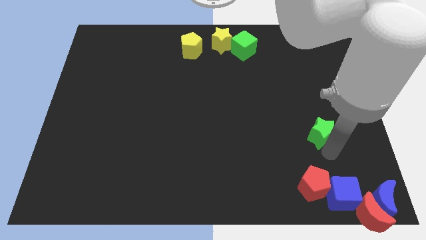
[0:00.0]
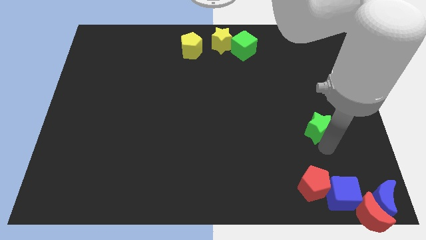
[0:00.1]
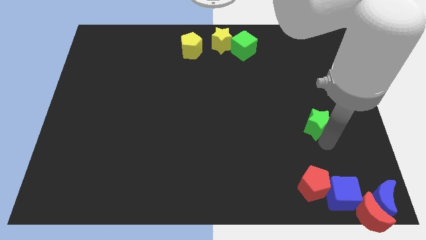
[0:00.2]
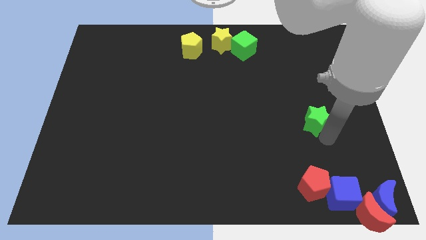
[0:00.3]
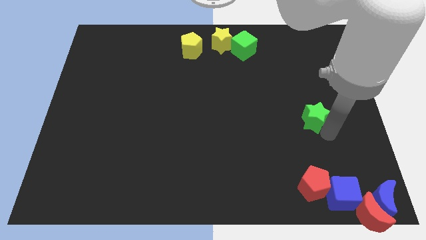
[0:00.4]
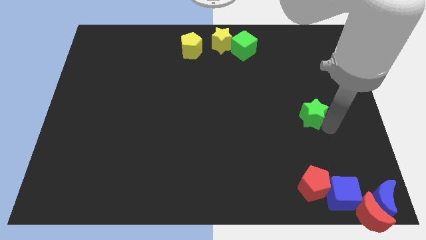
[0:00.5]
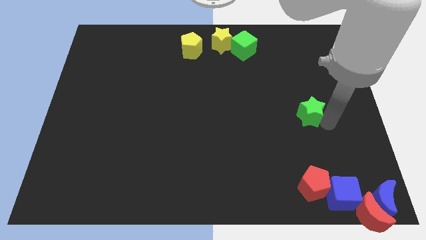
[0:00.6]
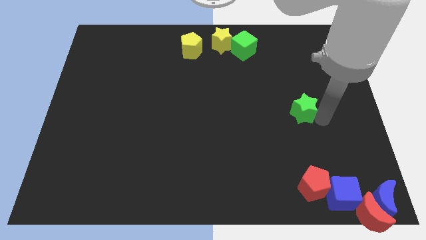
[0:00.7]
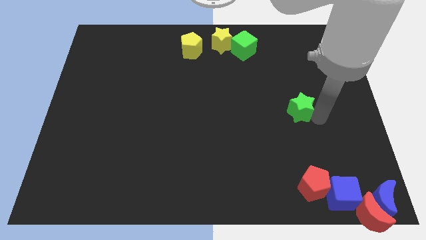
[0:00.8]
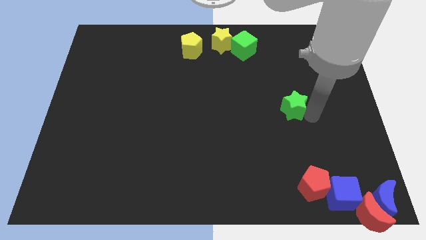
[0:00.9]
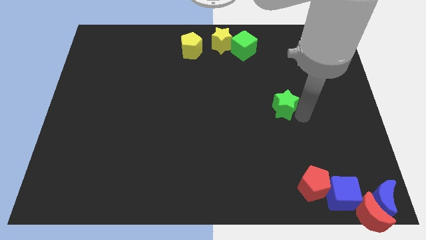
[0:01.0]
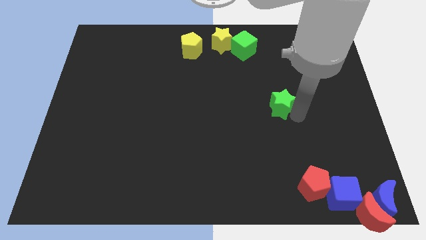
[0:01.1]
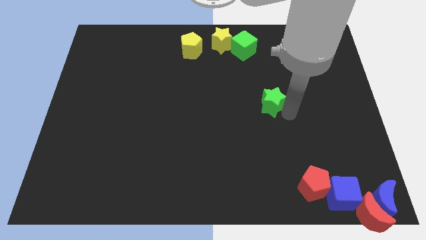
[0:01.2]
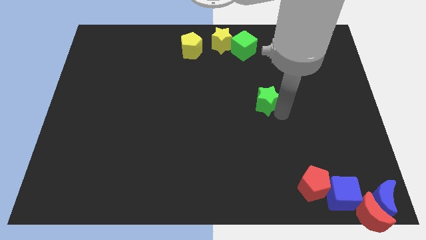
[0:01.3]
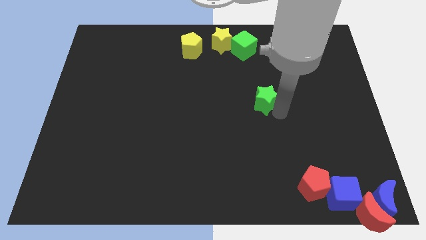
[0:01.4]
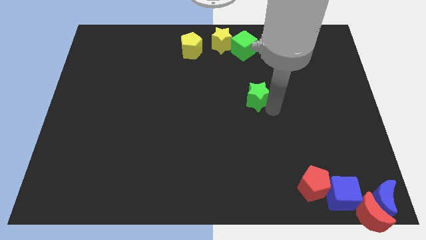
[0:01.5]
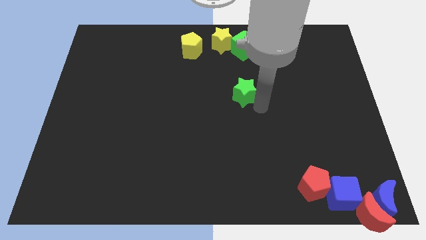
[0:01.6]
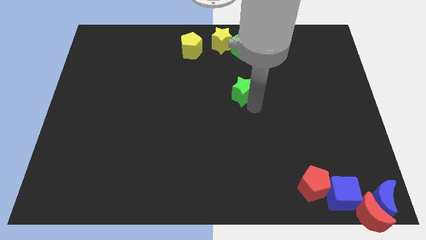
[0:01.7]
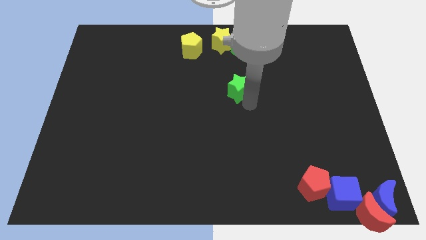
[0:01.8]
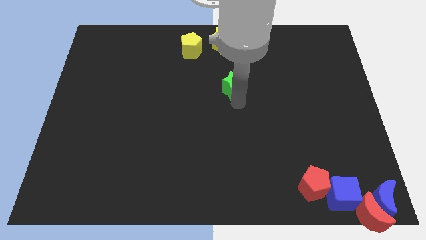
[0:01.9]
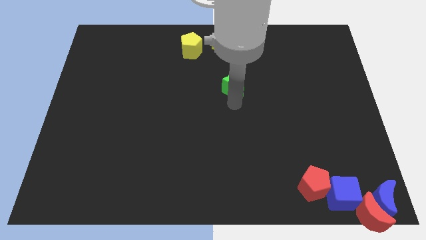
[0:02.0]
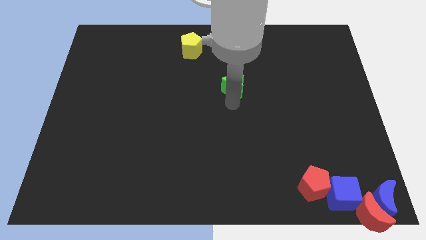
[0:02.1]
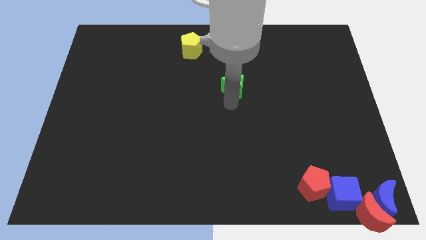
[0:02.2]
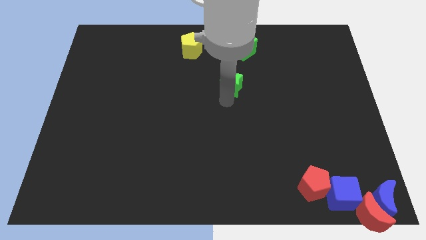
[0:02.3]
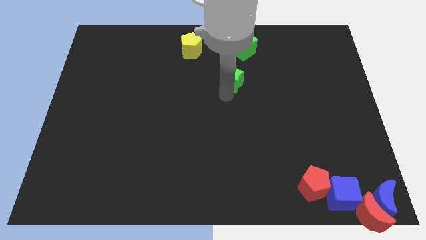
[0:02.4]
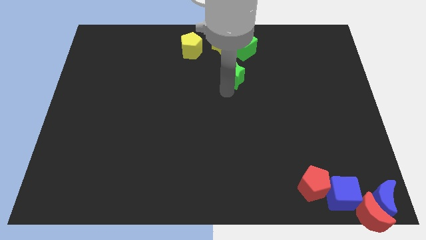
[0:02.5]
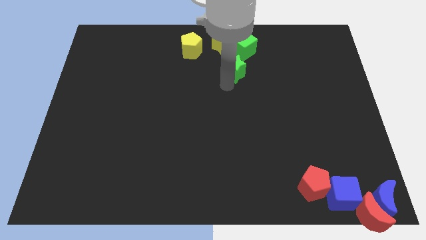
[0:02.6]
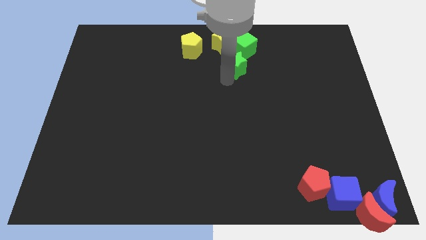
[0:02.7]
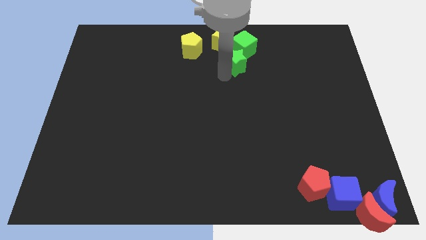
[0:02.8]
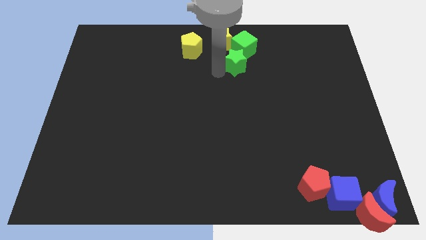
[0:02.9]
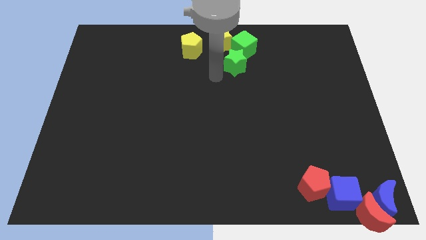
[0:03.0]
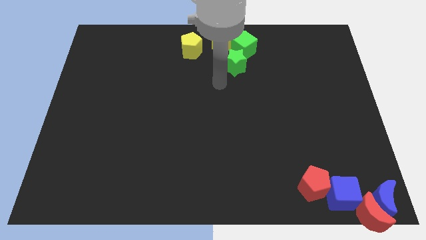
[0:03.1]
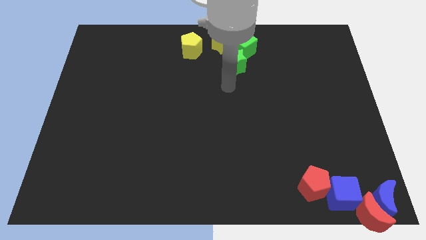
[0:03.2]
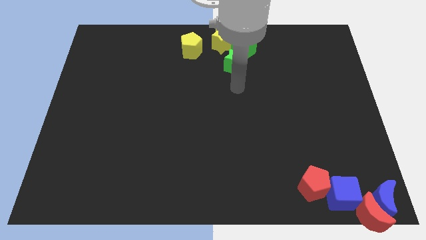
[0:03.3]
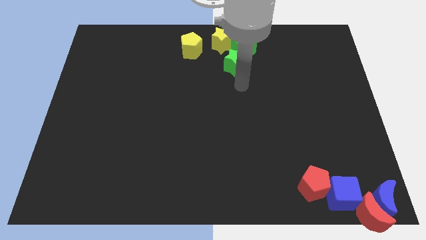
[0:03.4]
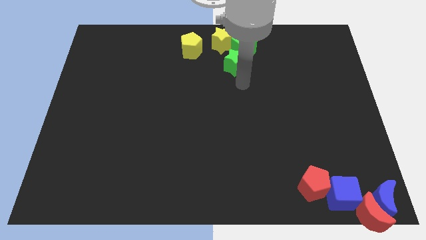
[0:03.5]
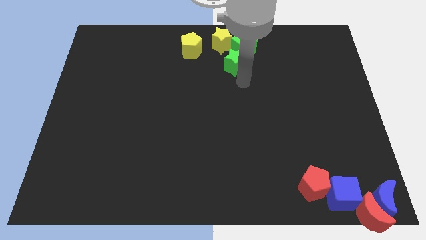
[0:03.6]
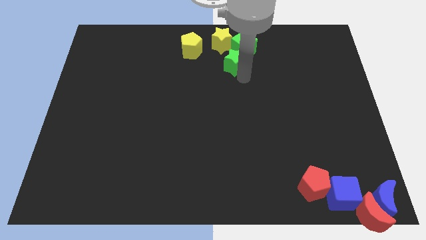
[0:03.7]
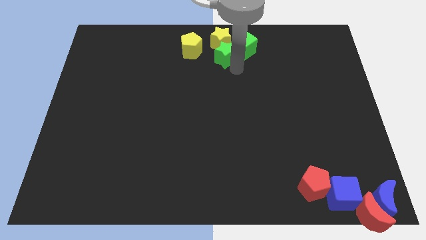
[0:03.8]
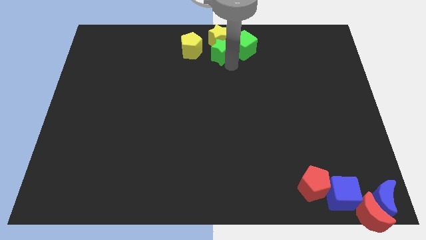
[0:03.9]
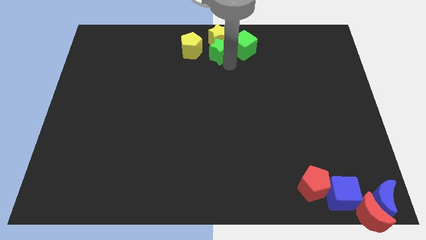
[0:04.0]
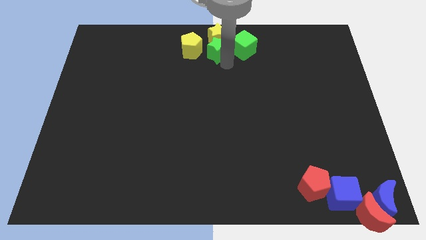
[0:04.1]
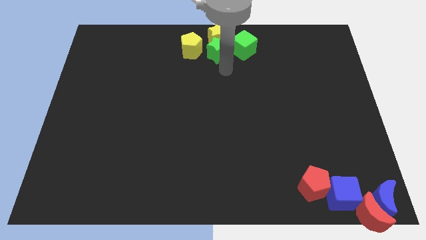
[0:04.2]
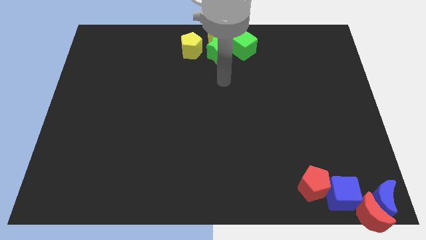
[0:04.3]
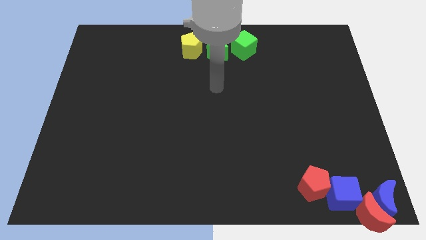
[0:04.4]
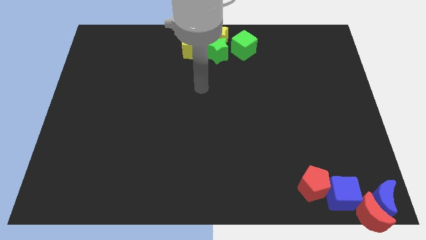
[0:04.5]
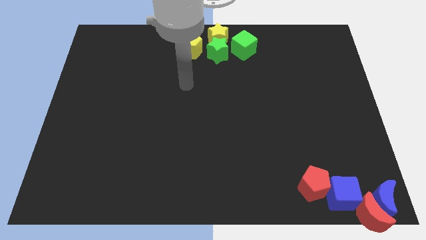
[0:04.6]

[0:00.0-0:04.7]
push the green star into the yellow star

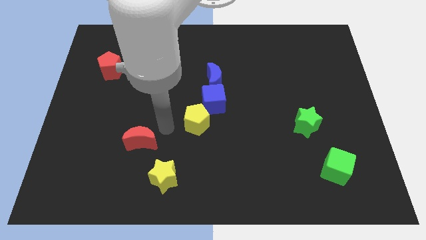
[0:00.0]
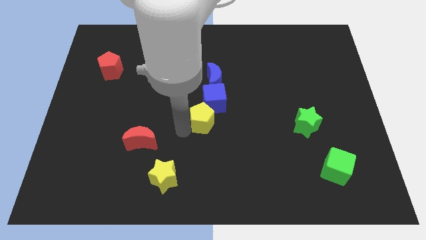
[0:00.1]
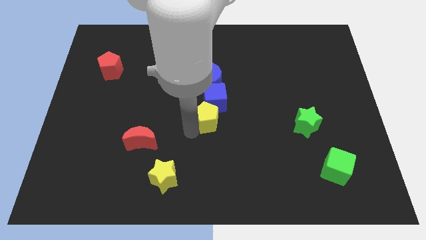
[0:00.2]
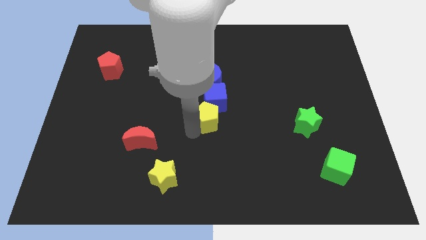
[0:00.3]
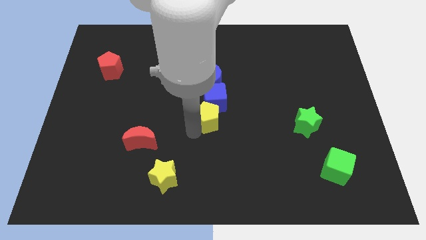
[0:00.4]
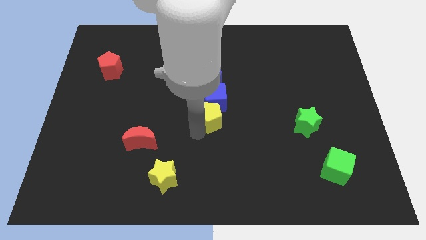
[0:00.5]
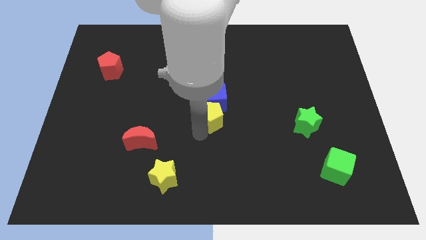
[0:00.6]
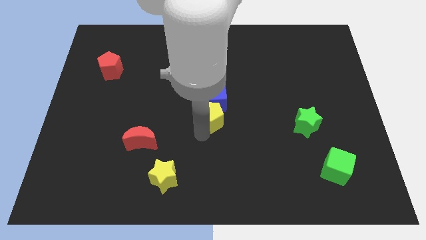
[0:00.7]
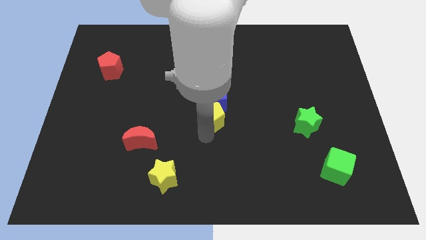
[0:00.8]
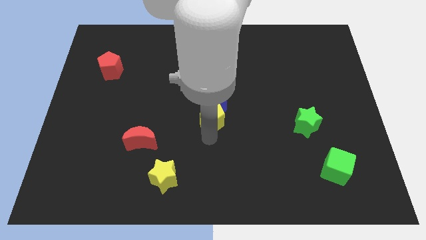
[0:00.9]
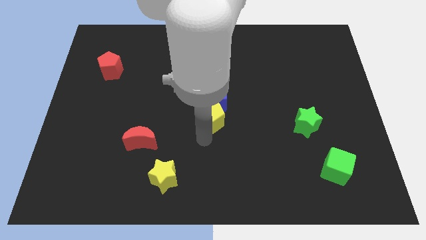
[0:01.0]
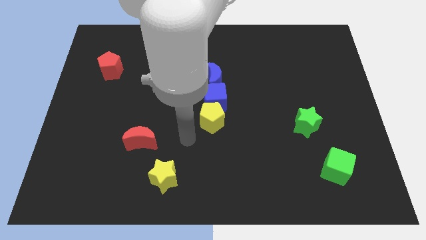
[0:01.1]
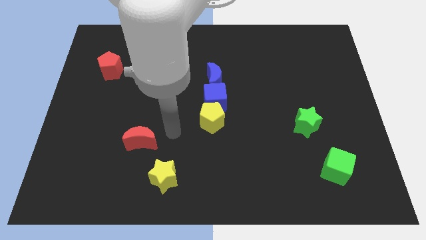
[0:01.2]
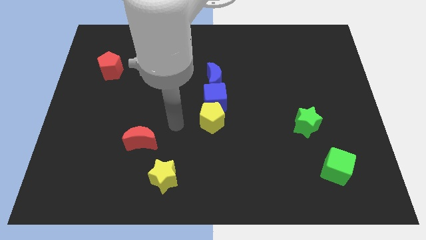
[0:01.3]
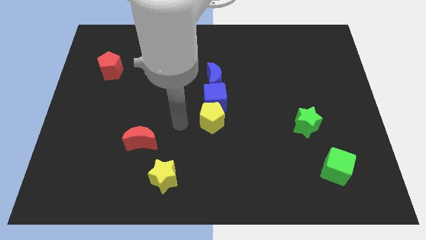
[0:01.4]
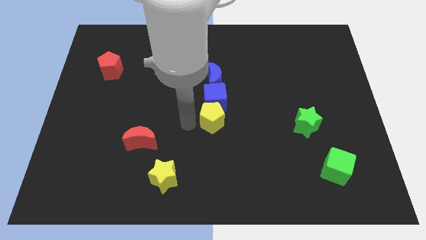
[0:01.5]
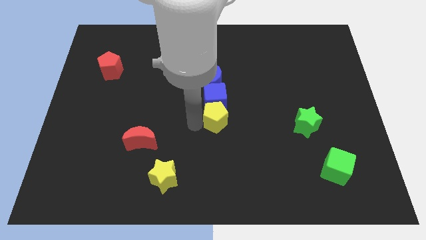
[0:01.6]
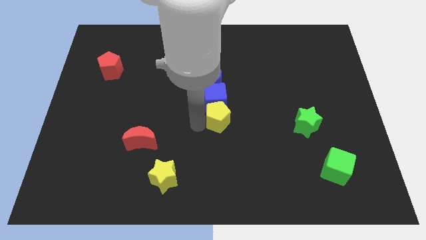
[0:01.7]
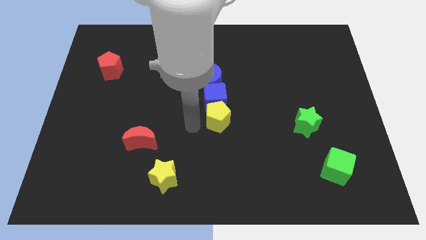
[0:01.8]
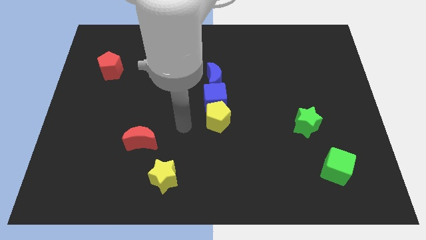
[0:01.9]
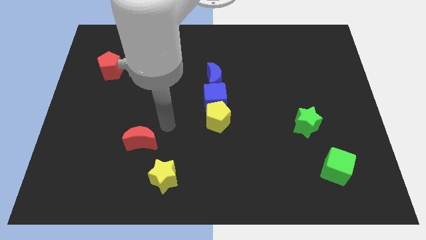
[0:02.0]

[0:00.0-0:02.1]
push the yellow pentagon to the left of green star

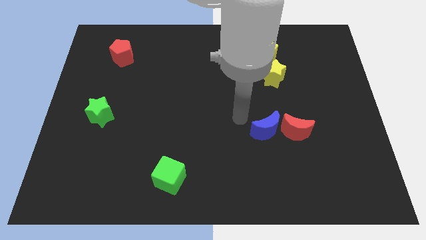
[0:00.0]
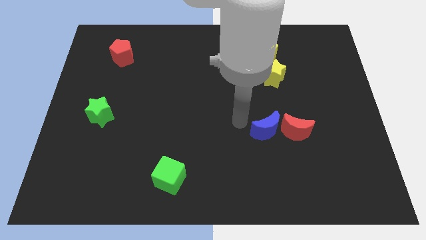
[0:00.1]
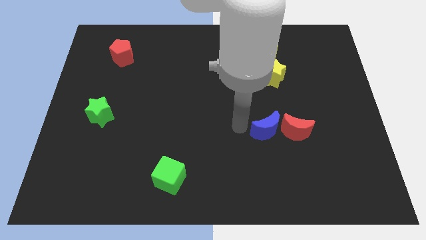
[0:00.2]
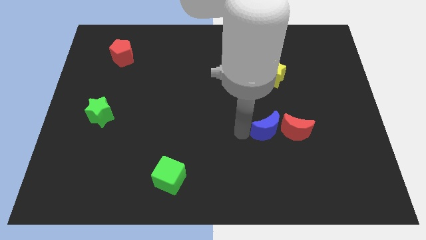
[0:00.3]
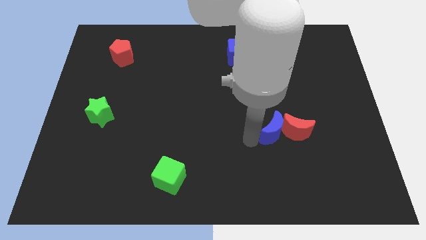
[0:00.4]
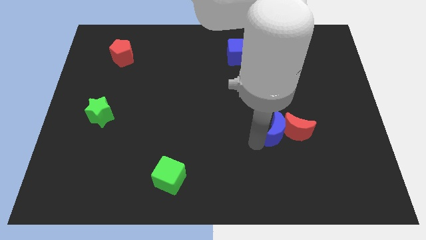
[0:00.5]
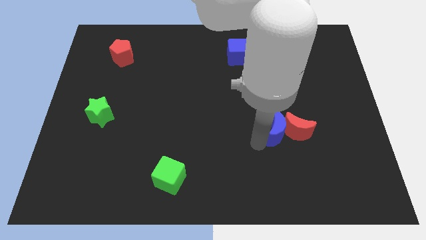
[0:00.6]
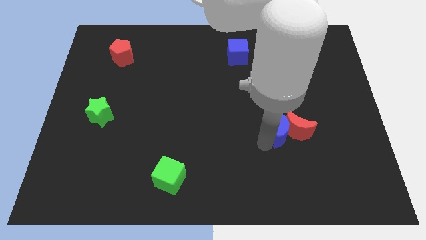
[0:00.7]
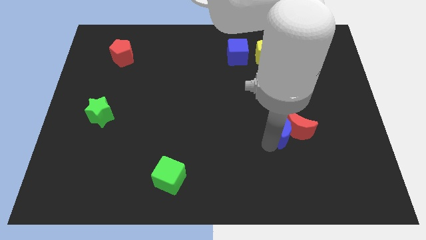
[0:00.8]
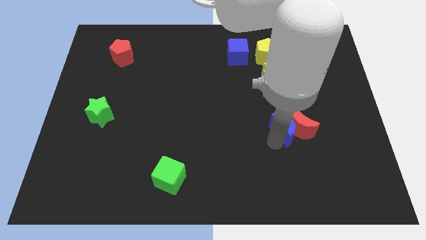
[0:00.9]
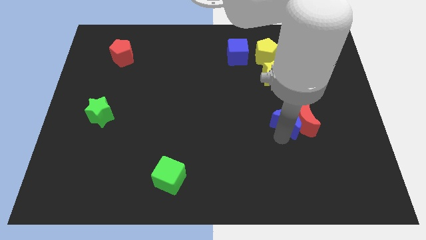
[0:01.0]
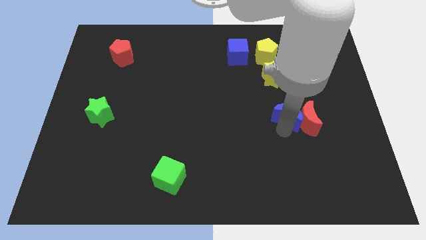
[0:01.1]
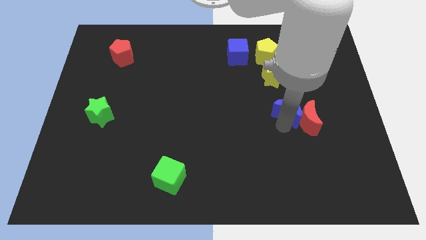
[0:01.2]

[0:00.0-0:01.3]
push the blue crescent into red crescent

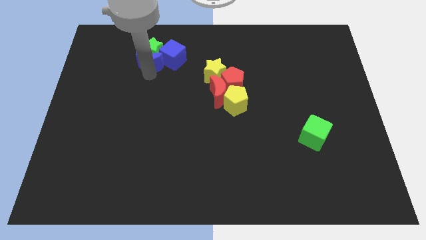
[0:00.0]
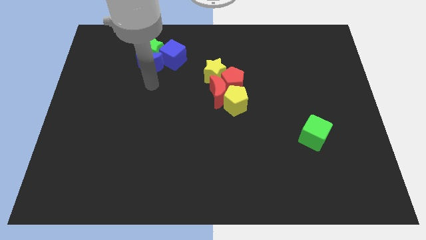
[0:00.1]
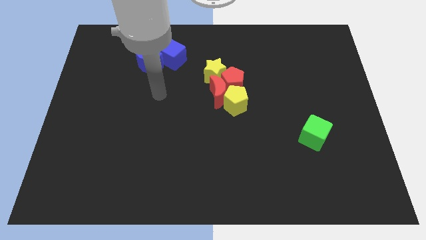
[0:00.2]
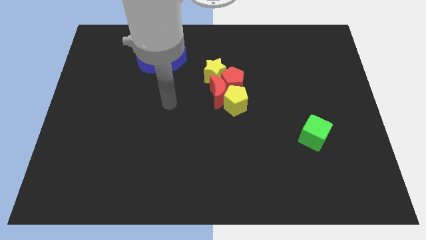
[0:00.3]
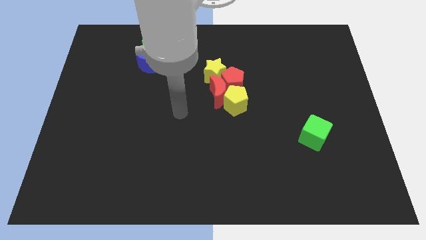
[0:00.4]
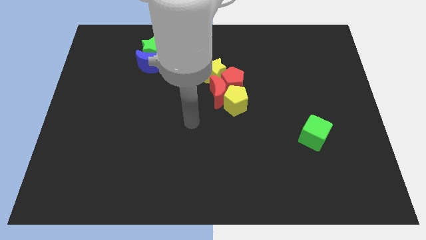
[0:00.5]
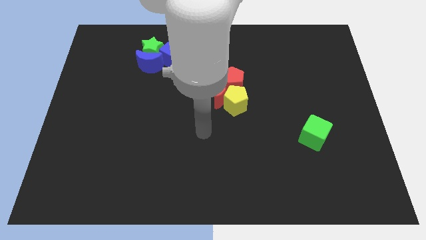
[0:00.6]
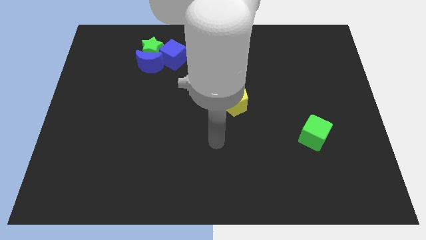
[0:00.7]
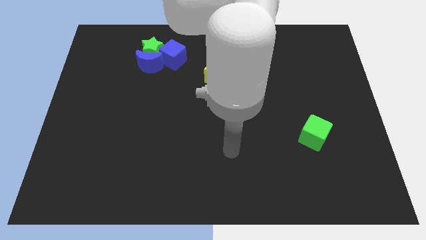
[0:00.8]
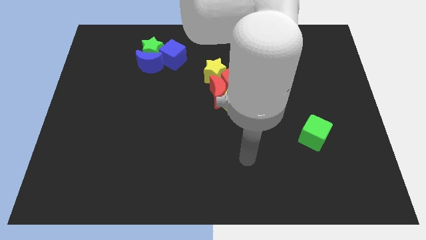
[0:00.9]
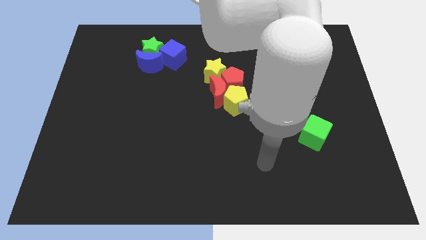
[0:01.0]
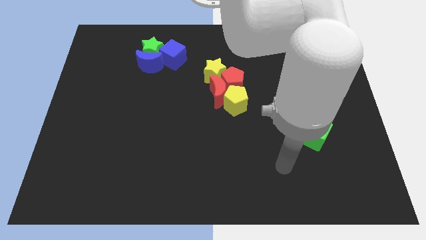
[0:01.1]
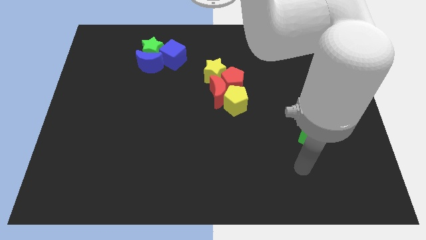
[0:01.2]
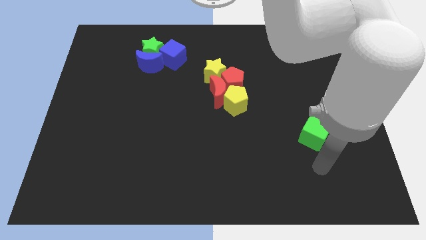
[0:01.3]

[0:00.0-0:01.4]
move your arm away from the blue moon
